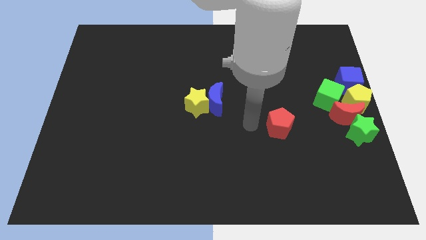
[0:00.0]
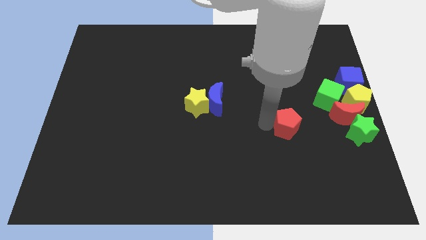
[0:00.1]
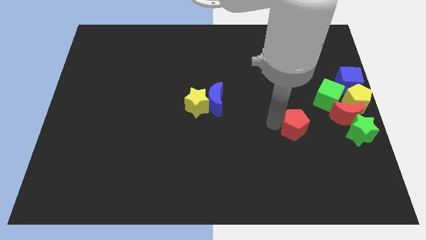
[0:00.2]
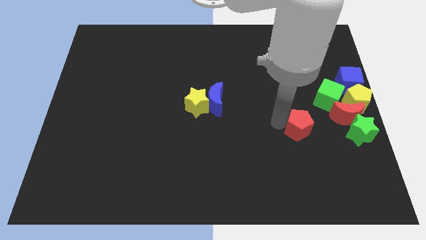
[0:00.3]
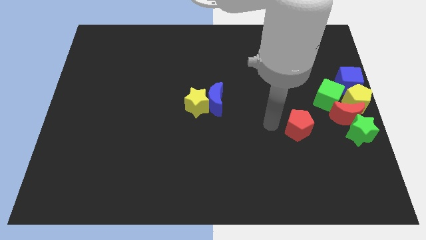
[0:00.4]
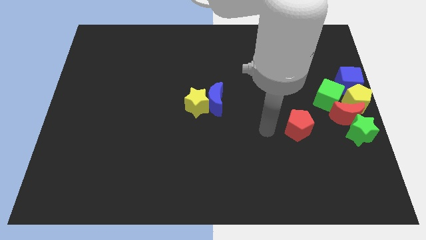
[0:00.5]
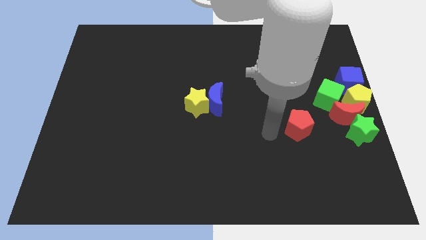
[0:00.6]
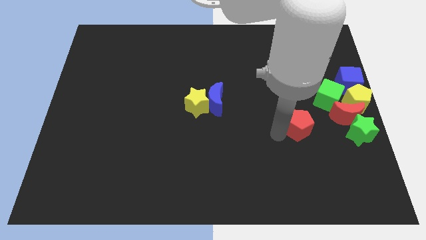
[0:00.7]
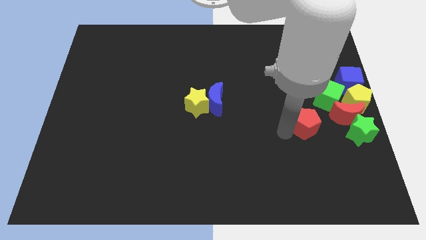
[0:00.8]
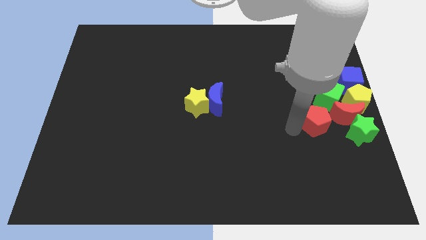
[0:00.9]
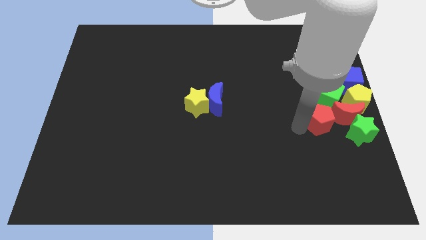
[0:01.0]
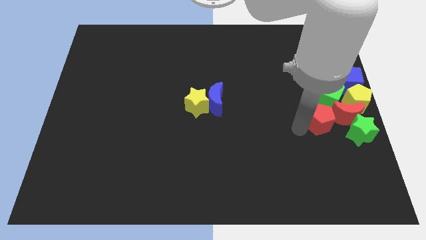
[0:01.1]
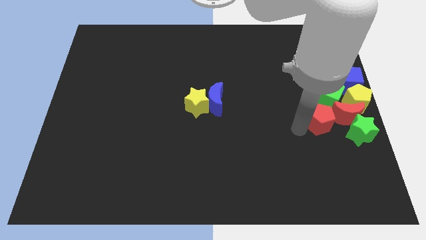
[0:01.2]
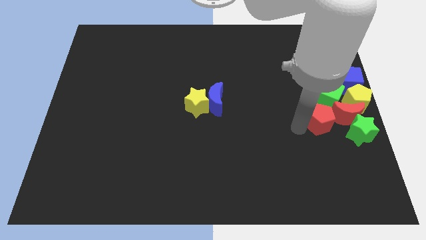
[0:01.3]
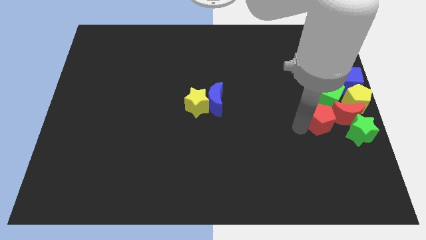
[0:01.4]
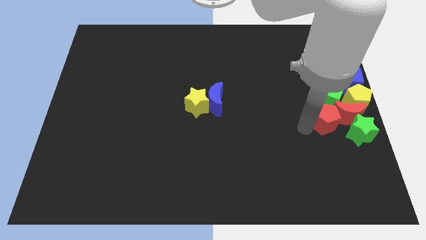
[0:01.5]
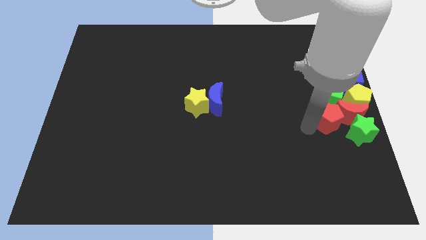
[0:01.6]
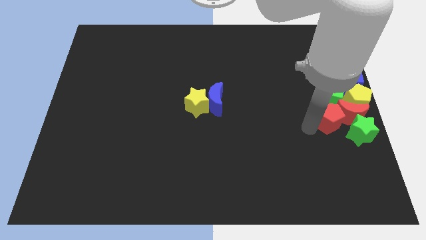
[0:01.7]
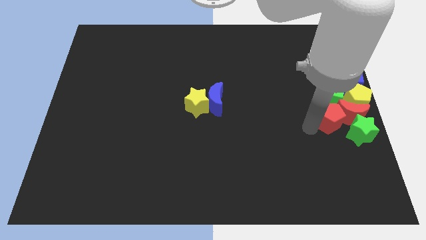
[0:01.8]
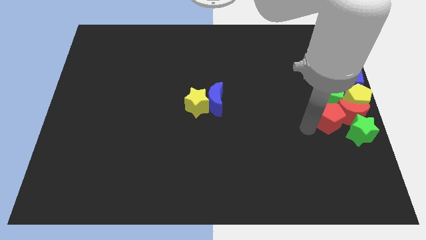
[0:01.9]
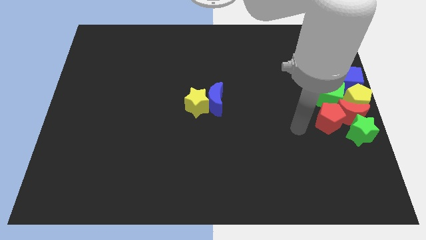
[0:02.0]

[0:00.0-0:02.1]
push the red pentagon into the red crescent

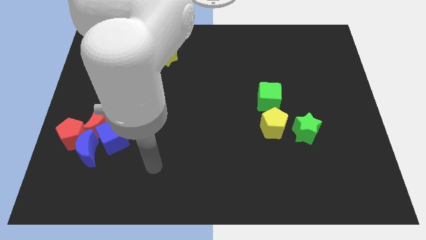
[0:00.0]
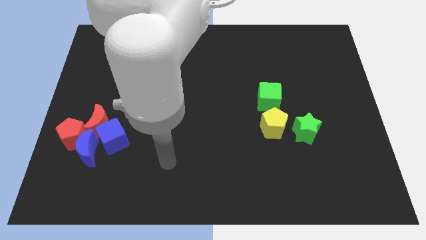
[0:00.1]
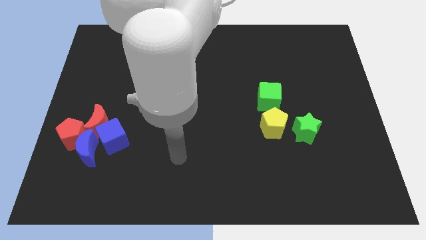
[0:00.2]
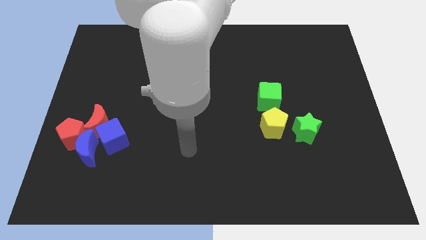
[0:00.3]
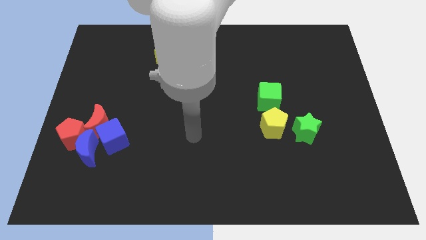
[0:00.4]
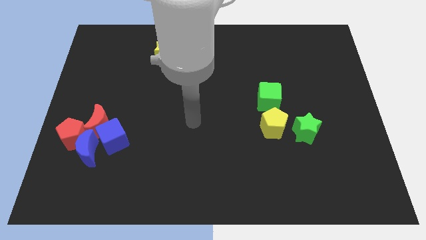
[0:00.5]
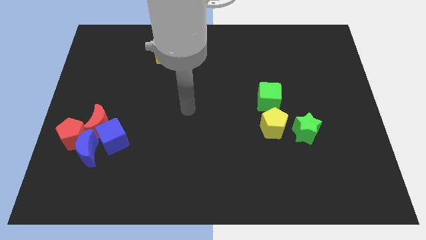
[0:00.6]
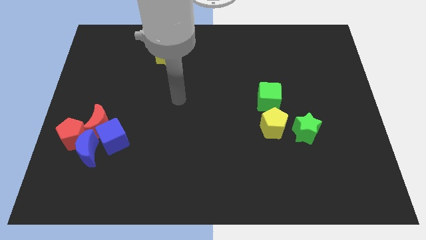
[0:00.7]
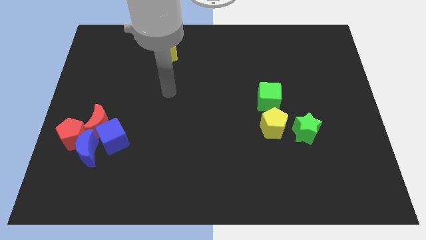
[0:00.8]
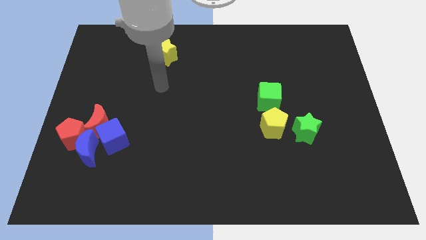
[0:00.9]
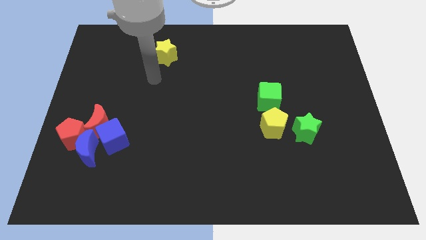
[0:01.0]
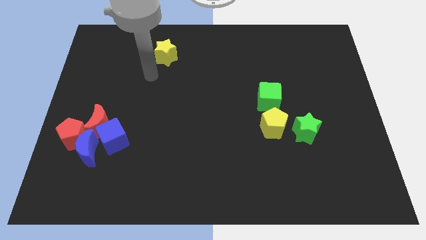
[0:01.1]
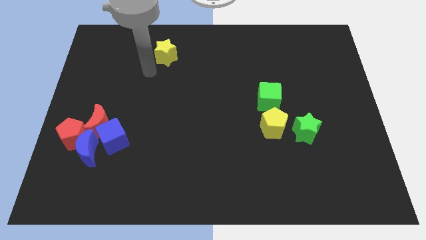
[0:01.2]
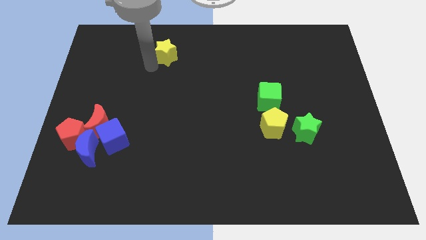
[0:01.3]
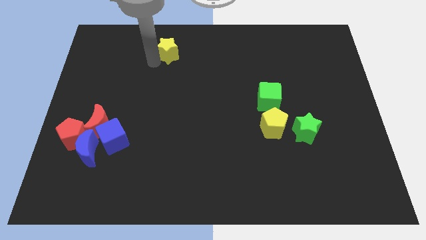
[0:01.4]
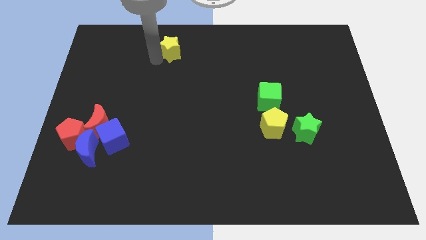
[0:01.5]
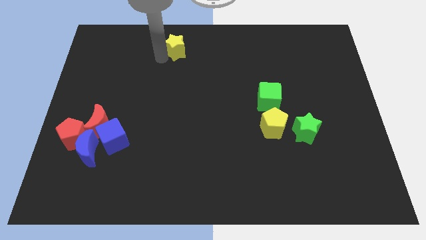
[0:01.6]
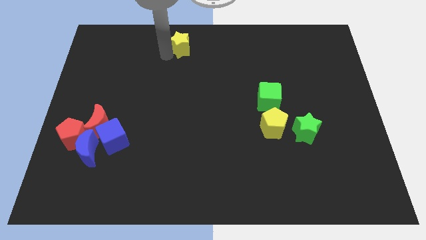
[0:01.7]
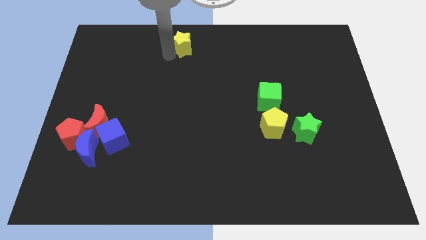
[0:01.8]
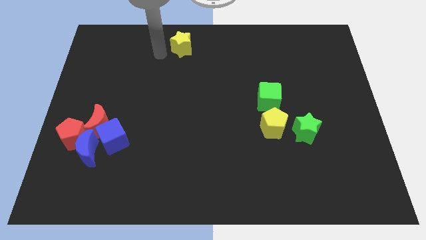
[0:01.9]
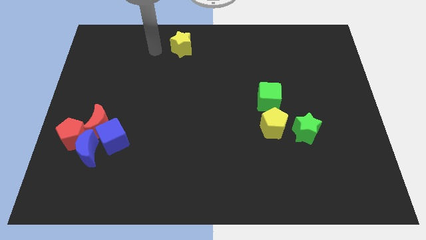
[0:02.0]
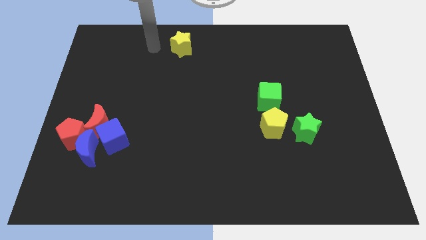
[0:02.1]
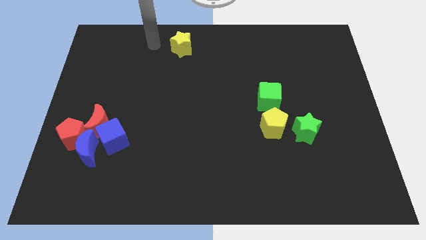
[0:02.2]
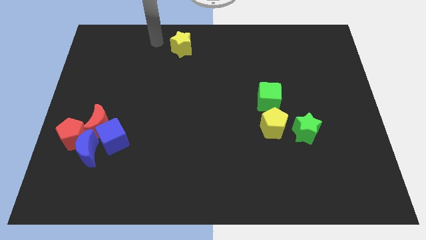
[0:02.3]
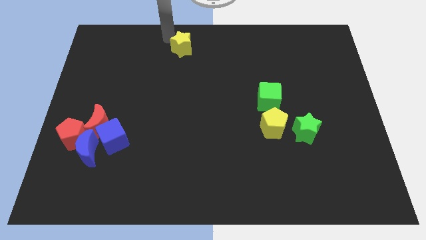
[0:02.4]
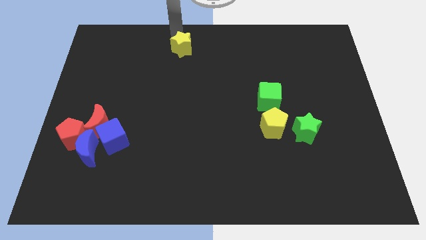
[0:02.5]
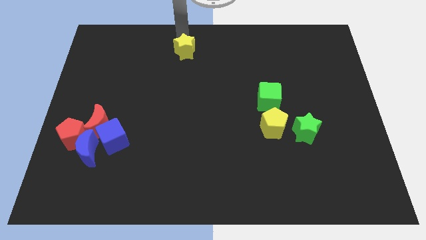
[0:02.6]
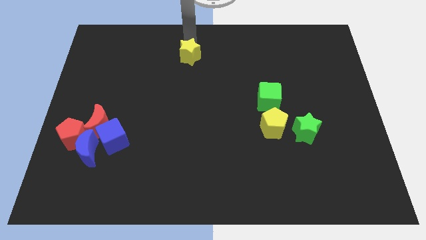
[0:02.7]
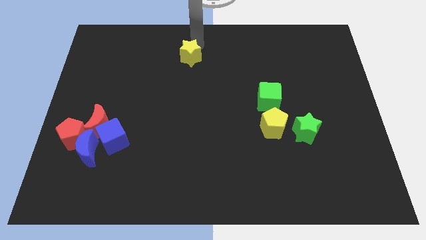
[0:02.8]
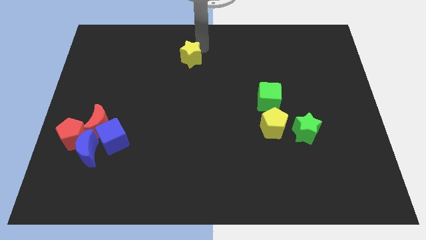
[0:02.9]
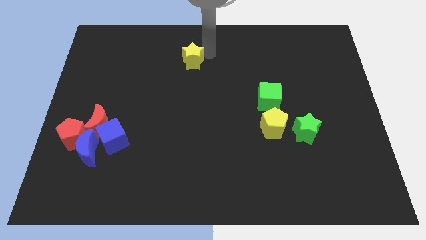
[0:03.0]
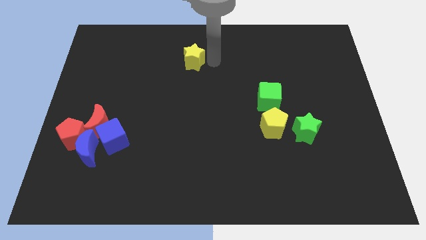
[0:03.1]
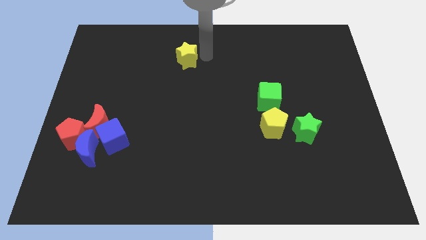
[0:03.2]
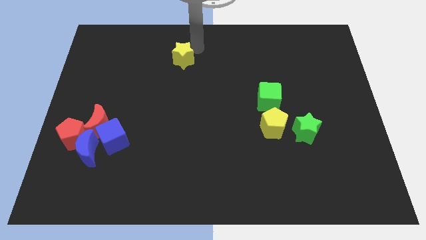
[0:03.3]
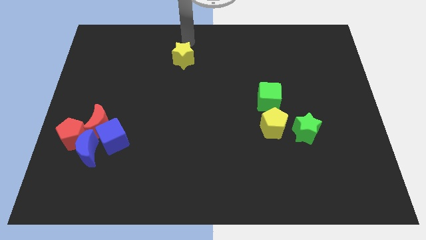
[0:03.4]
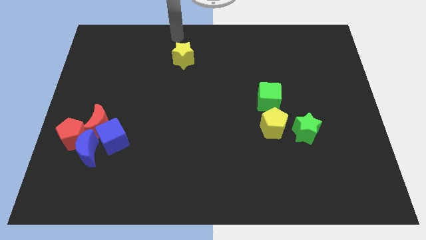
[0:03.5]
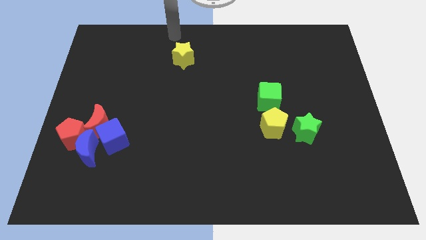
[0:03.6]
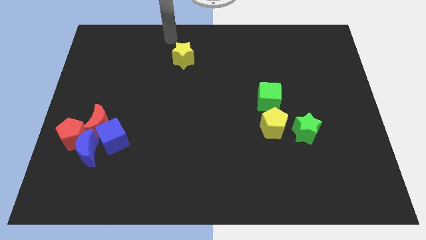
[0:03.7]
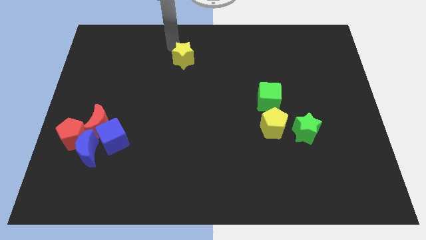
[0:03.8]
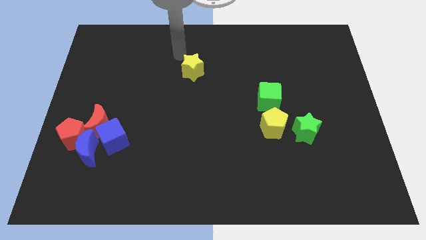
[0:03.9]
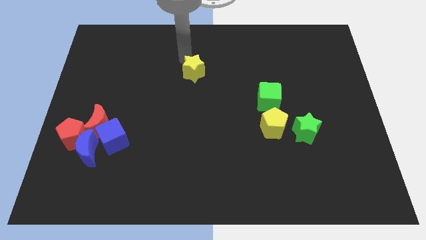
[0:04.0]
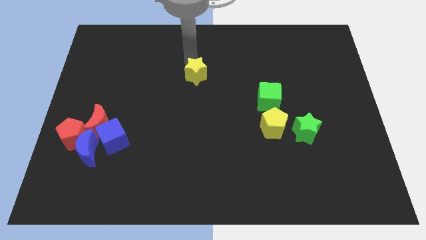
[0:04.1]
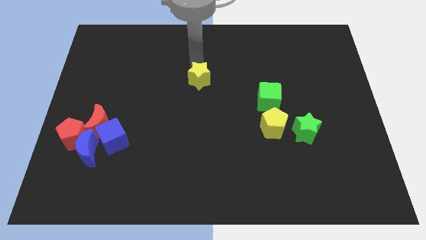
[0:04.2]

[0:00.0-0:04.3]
slide the yellow star towards the center of the board

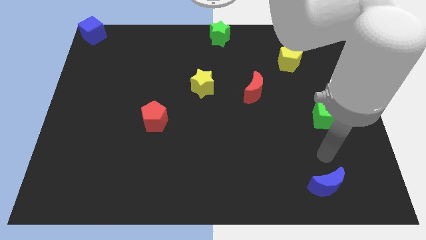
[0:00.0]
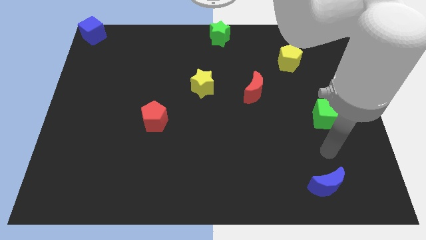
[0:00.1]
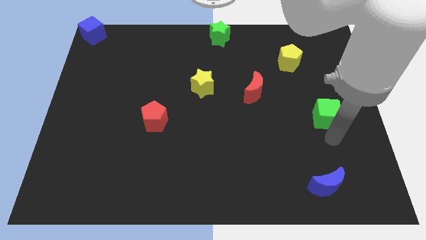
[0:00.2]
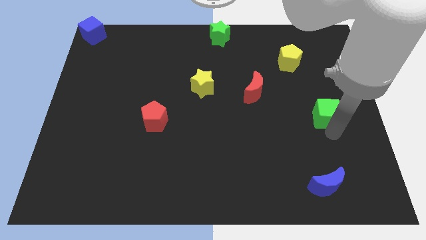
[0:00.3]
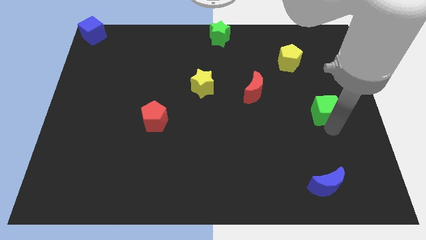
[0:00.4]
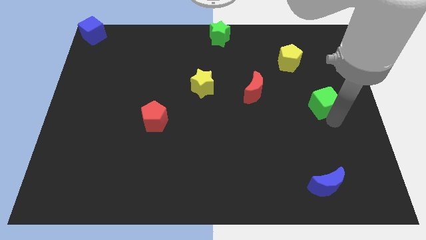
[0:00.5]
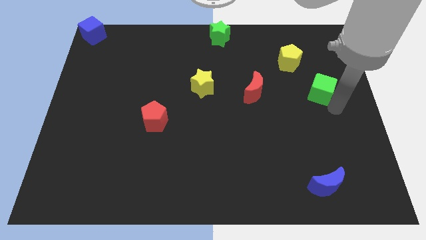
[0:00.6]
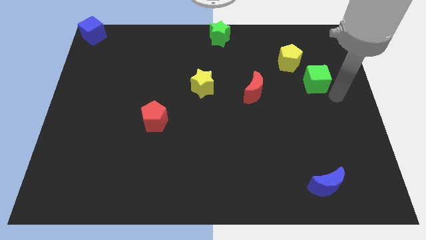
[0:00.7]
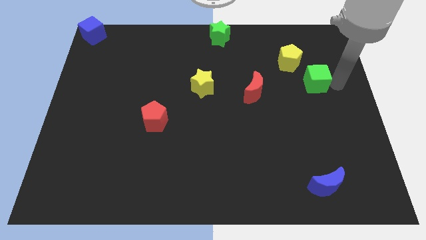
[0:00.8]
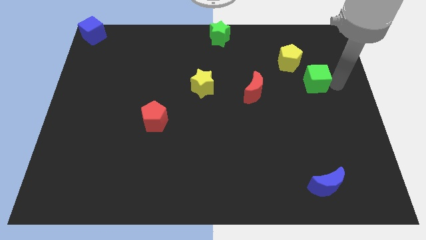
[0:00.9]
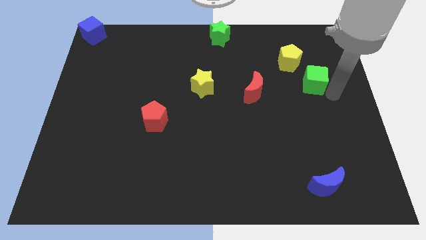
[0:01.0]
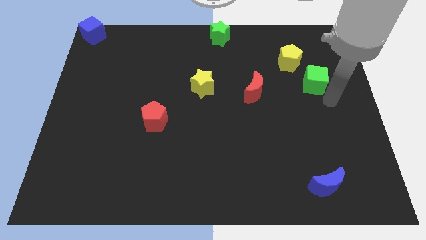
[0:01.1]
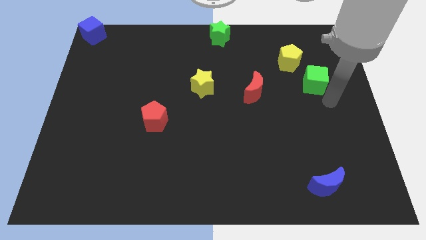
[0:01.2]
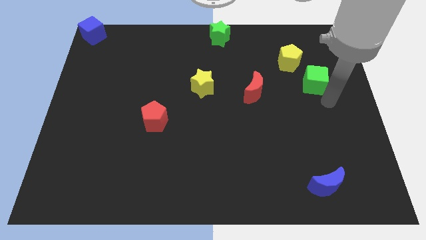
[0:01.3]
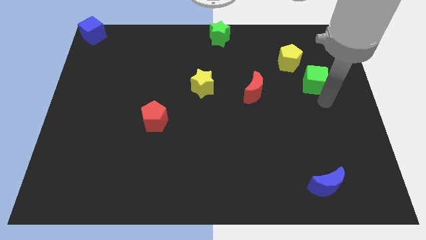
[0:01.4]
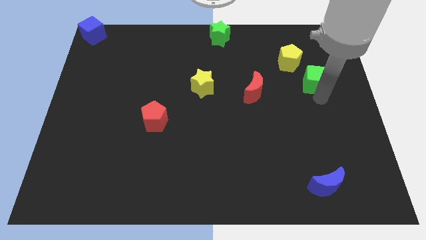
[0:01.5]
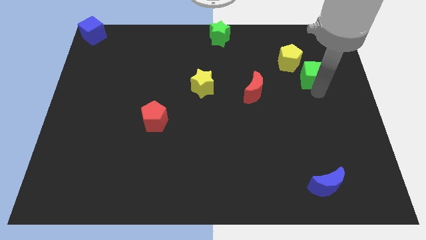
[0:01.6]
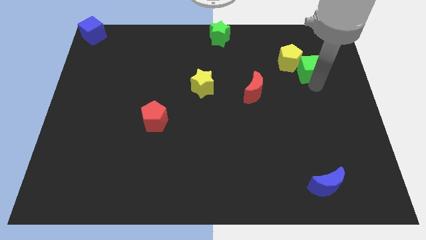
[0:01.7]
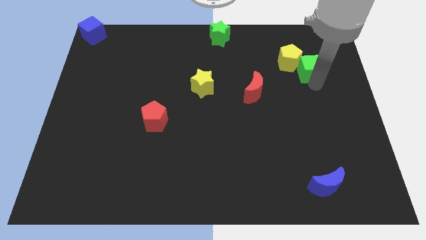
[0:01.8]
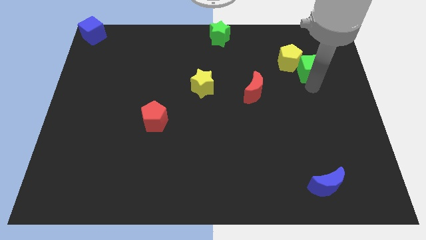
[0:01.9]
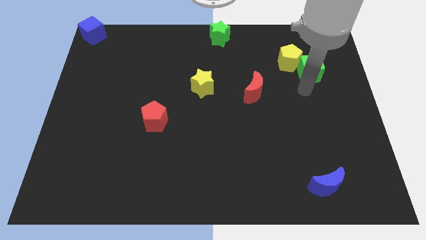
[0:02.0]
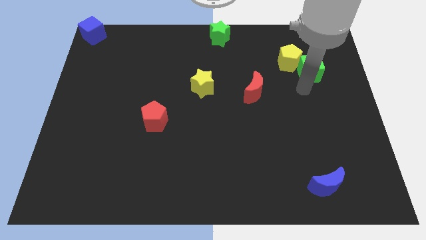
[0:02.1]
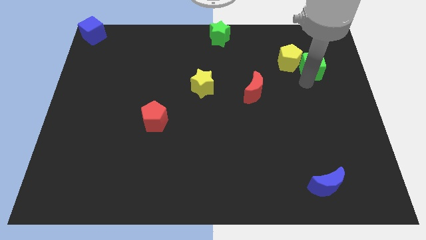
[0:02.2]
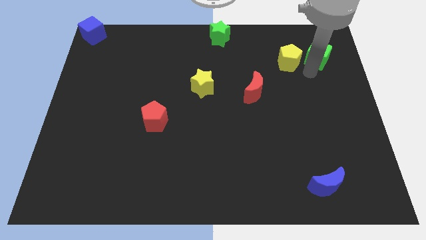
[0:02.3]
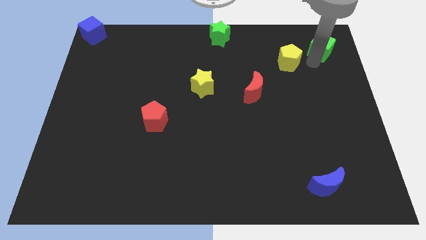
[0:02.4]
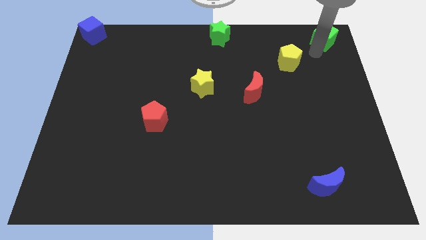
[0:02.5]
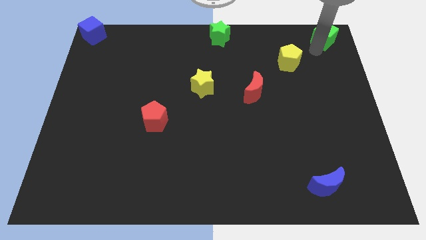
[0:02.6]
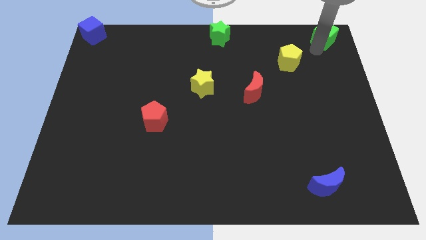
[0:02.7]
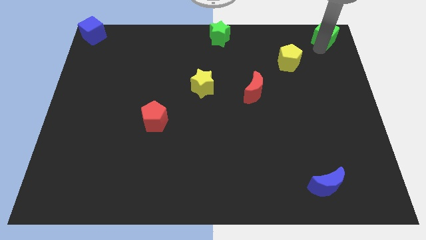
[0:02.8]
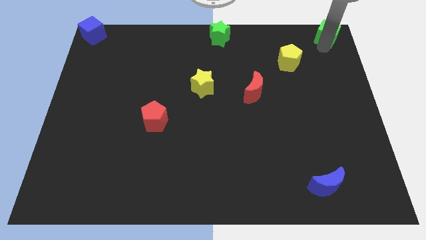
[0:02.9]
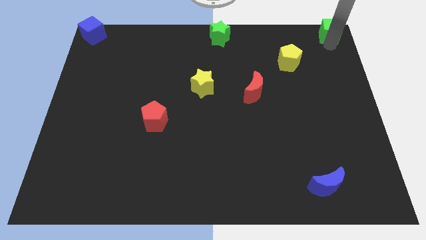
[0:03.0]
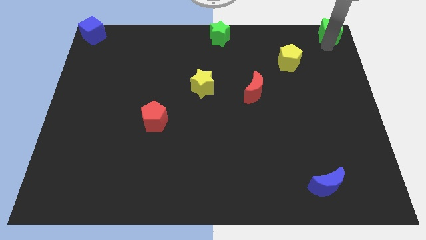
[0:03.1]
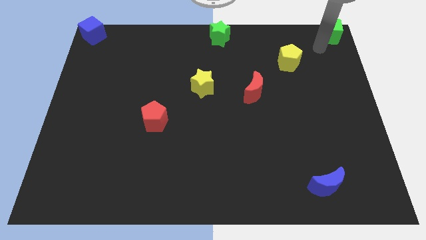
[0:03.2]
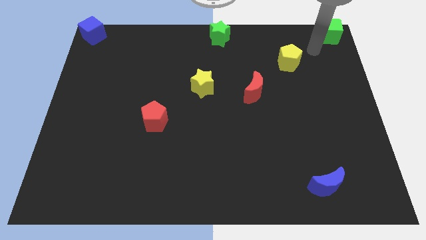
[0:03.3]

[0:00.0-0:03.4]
move the green cube to the top right corner of the board
